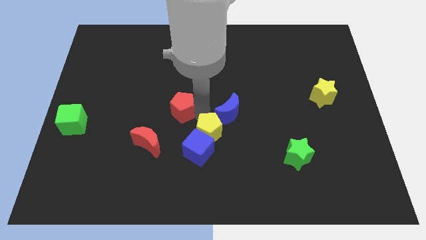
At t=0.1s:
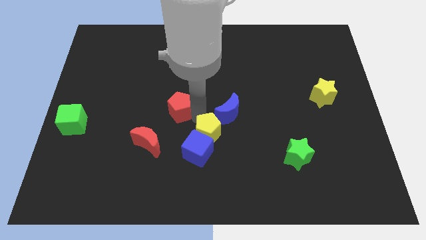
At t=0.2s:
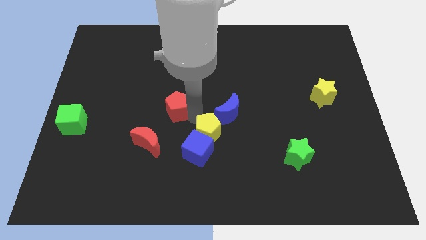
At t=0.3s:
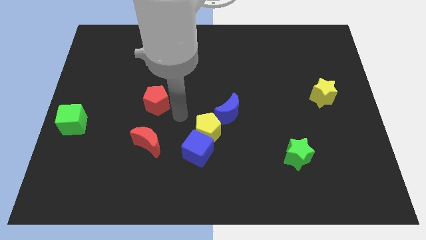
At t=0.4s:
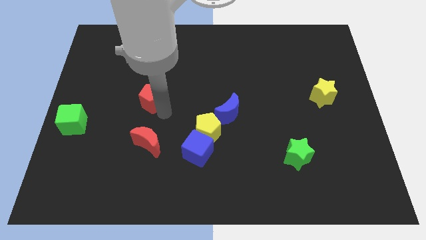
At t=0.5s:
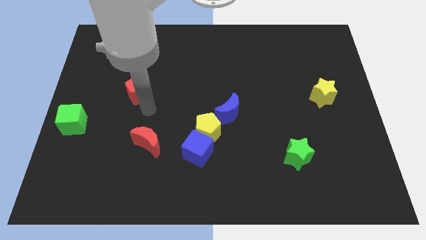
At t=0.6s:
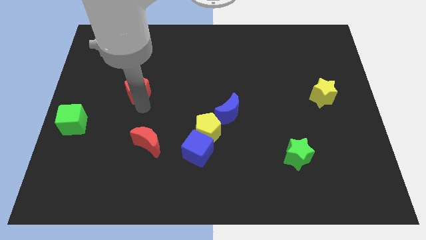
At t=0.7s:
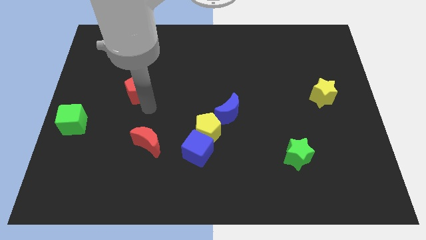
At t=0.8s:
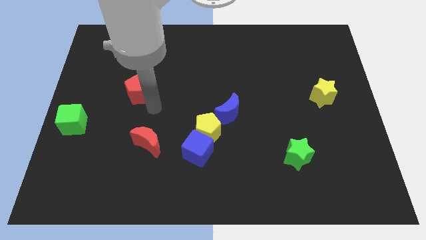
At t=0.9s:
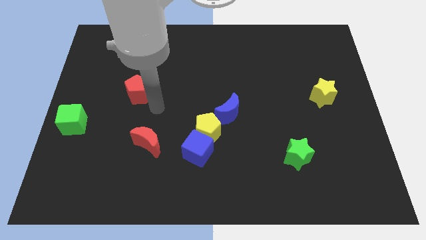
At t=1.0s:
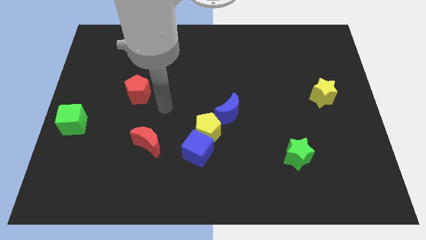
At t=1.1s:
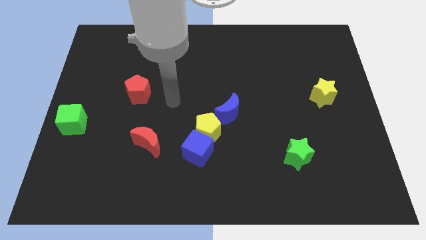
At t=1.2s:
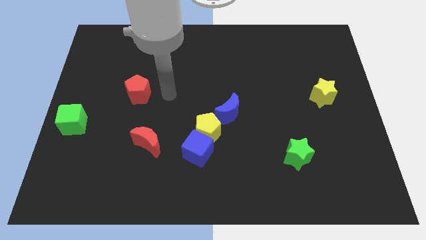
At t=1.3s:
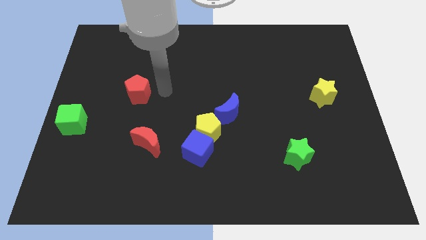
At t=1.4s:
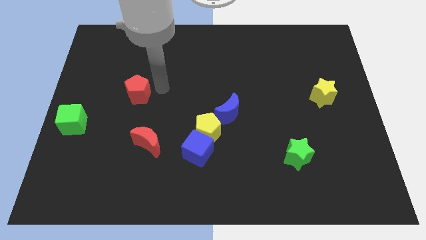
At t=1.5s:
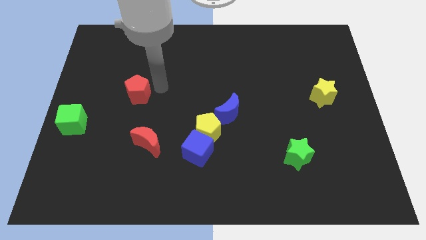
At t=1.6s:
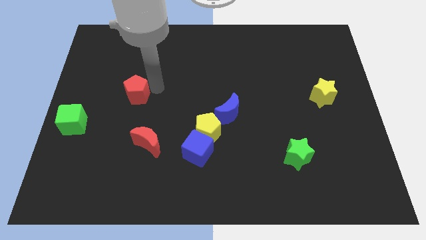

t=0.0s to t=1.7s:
move the red pentagon slightly towards the top left of the board

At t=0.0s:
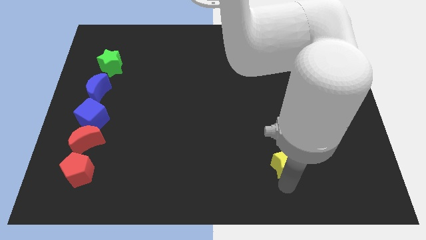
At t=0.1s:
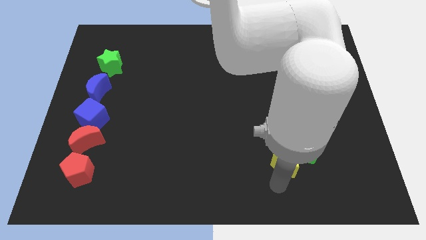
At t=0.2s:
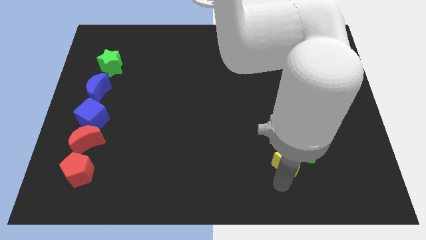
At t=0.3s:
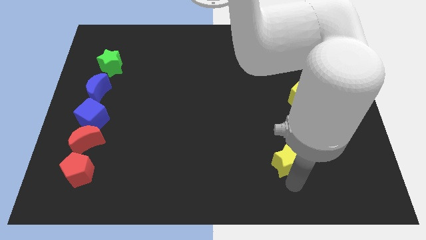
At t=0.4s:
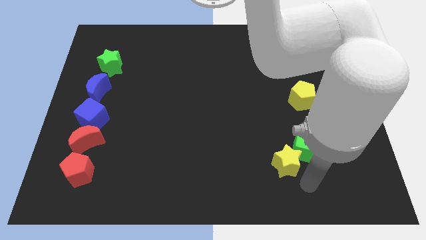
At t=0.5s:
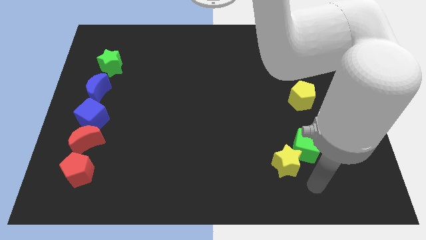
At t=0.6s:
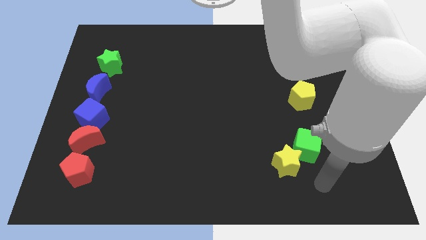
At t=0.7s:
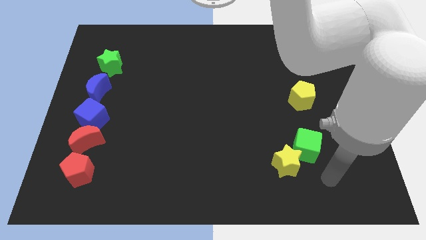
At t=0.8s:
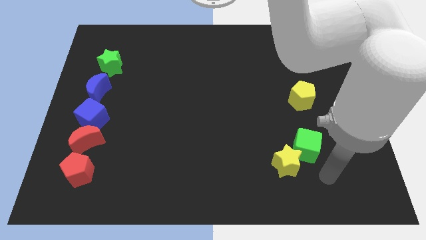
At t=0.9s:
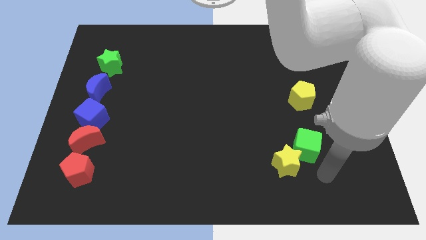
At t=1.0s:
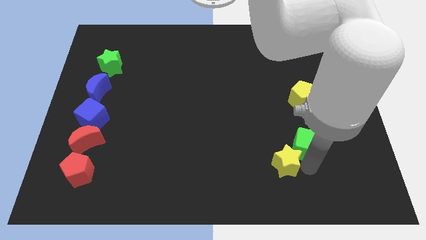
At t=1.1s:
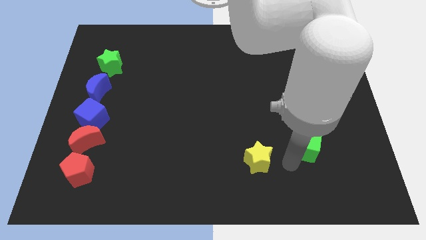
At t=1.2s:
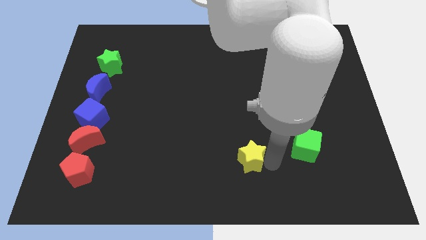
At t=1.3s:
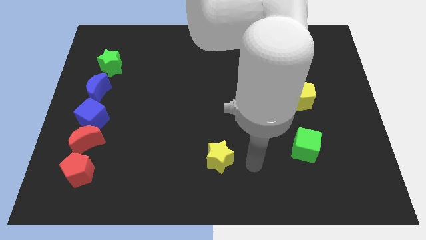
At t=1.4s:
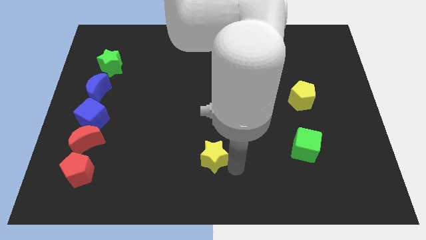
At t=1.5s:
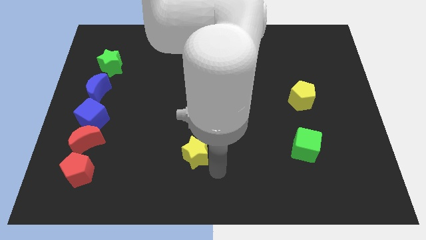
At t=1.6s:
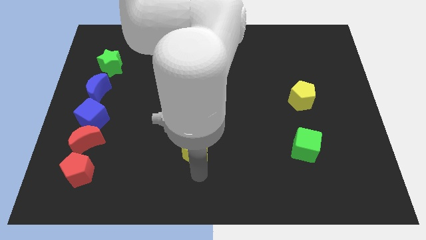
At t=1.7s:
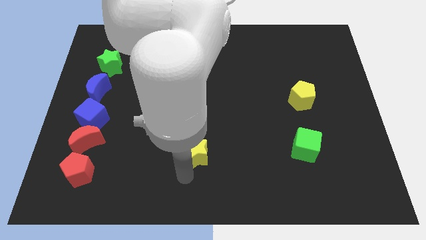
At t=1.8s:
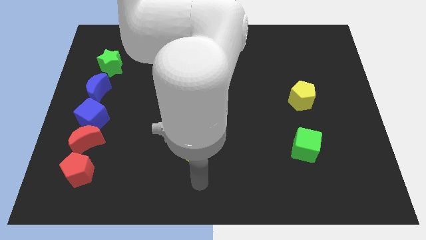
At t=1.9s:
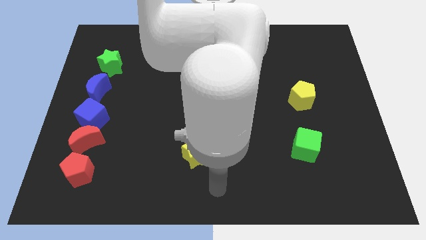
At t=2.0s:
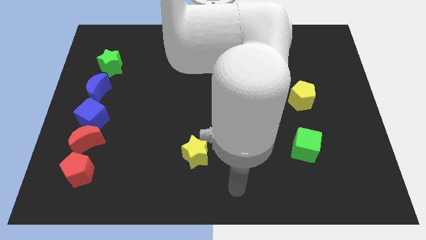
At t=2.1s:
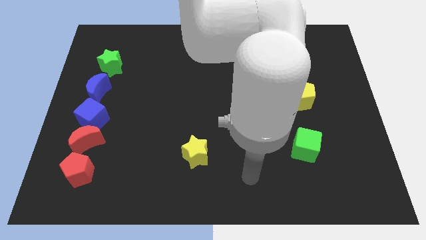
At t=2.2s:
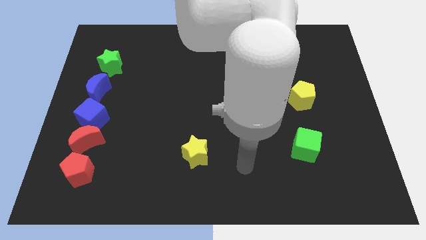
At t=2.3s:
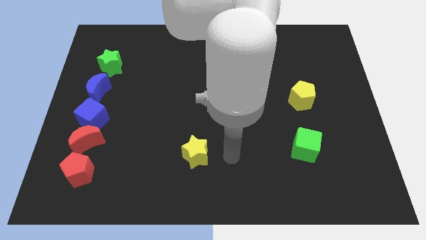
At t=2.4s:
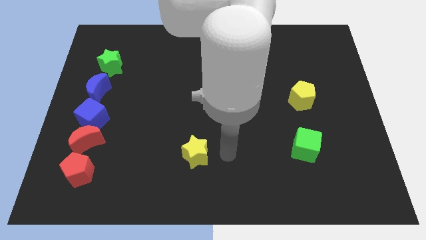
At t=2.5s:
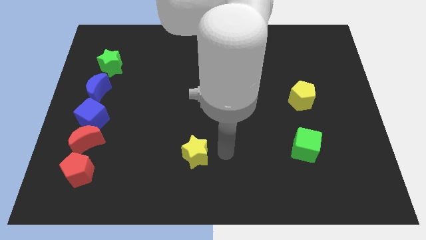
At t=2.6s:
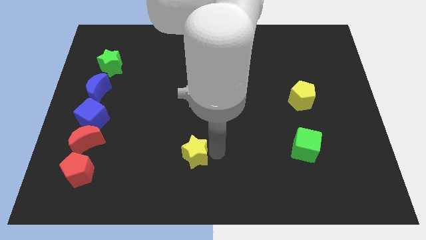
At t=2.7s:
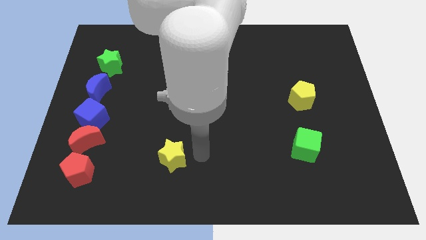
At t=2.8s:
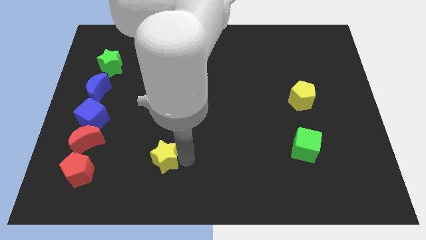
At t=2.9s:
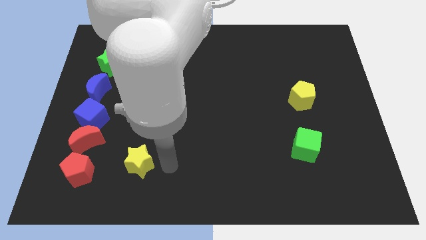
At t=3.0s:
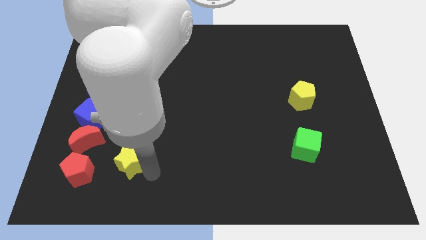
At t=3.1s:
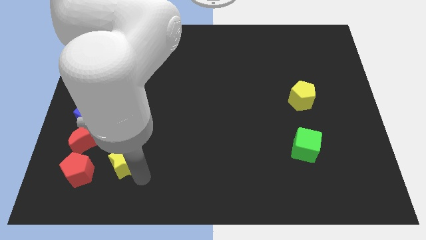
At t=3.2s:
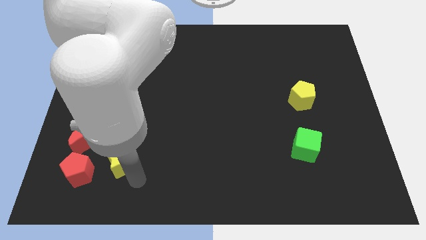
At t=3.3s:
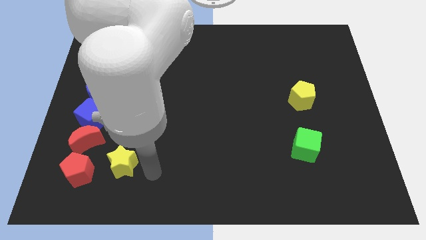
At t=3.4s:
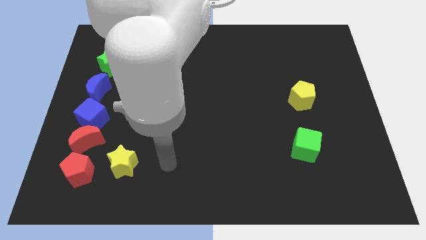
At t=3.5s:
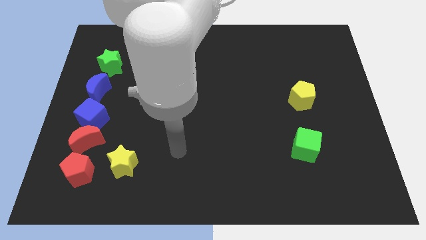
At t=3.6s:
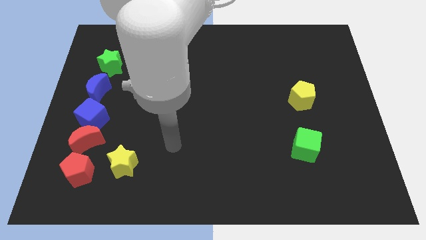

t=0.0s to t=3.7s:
separate yellow pentagon from green cube

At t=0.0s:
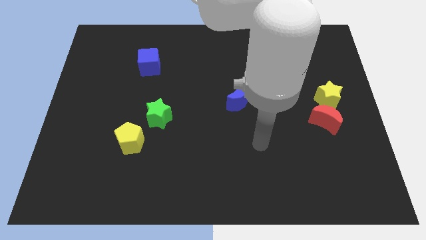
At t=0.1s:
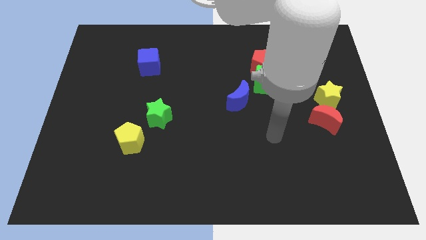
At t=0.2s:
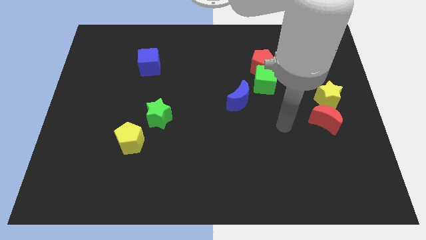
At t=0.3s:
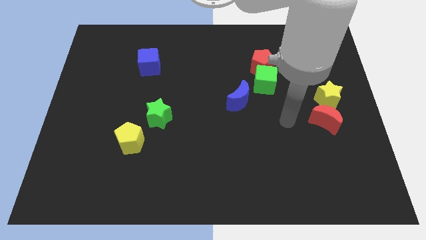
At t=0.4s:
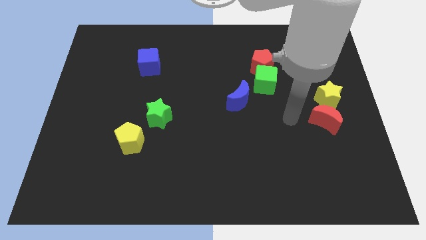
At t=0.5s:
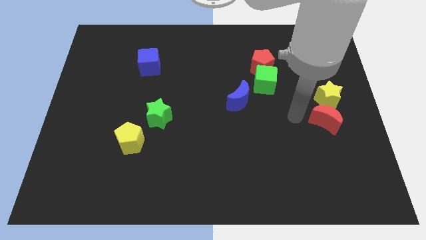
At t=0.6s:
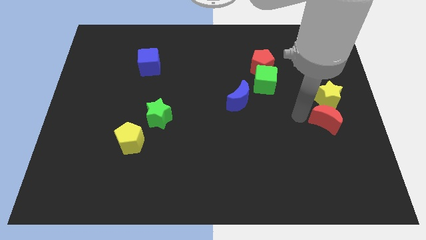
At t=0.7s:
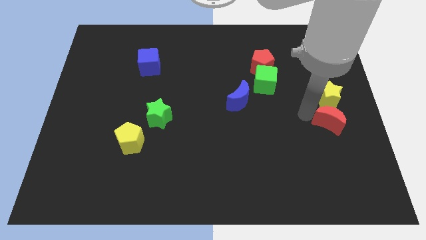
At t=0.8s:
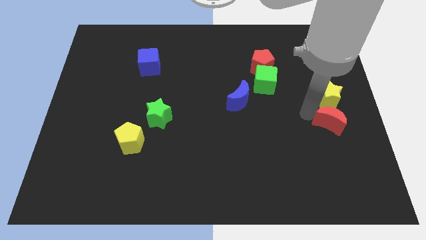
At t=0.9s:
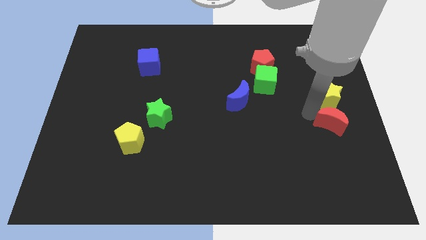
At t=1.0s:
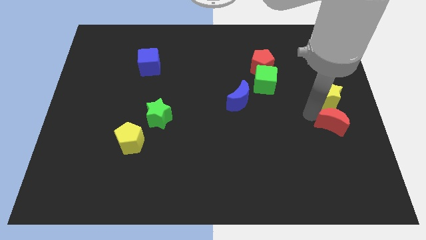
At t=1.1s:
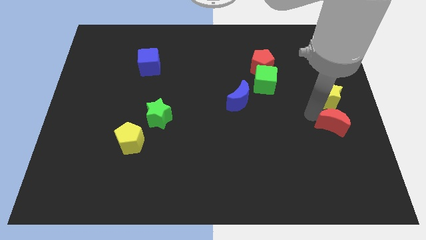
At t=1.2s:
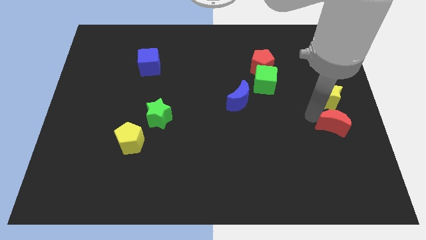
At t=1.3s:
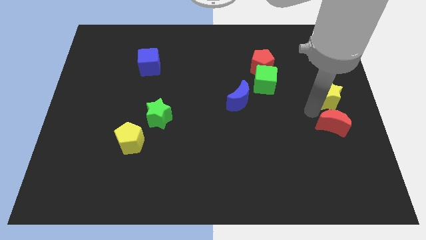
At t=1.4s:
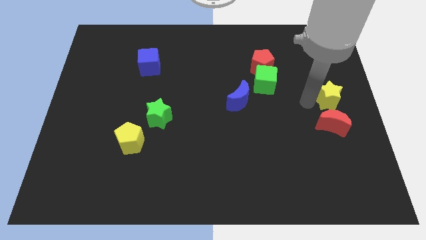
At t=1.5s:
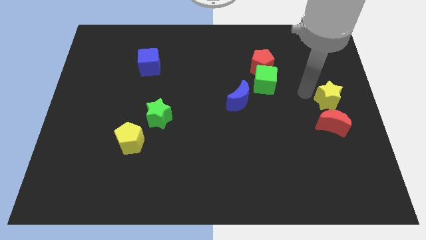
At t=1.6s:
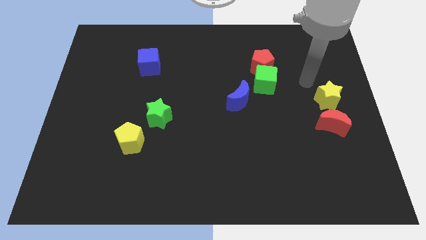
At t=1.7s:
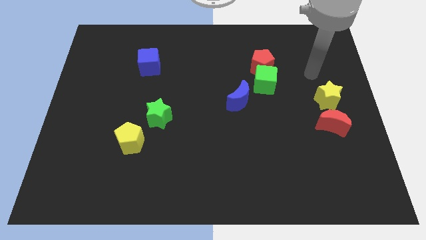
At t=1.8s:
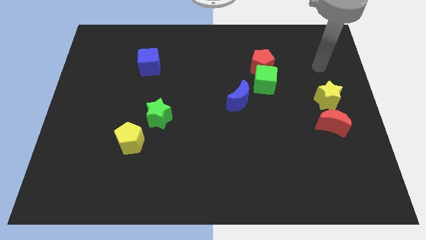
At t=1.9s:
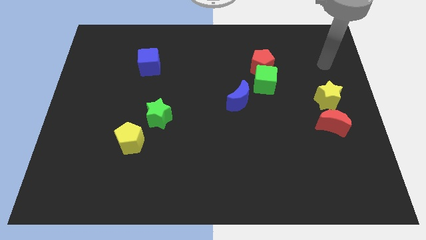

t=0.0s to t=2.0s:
push the red crescent to the right of the board

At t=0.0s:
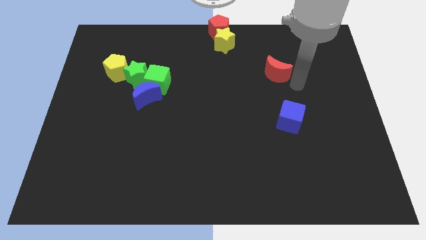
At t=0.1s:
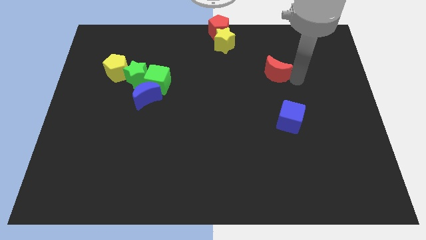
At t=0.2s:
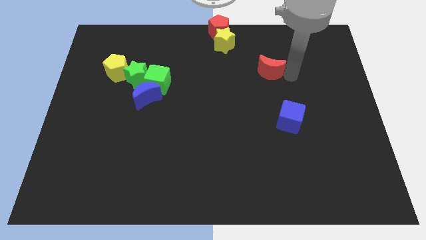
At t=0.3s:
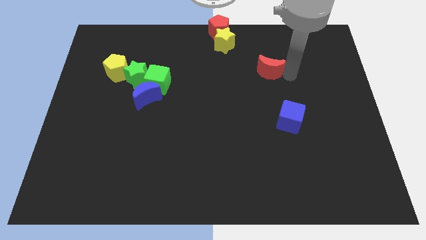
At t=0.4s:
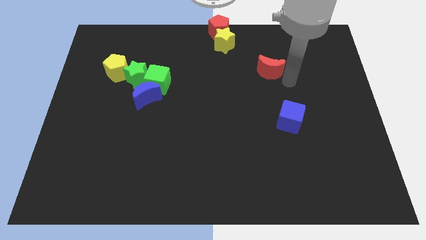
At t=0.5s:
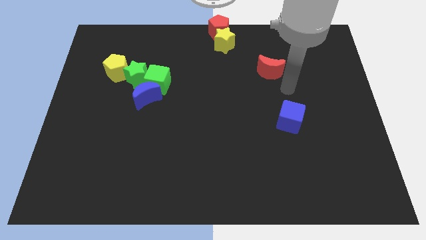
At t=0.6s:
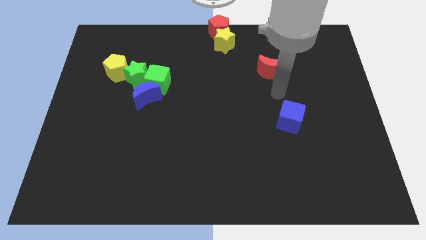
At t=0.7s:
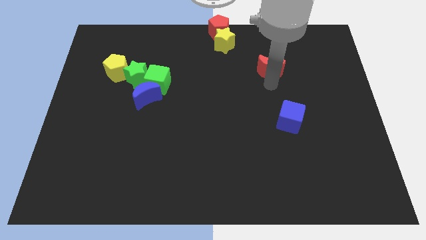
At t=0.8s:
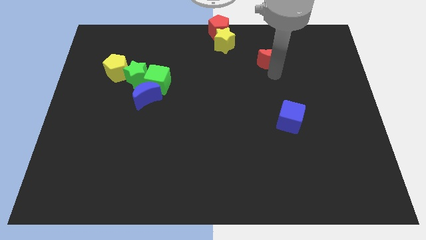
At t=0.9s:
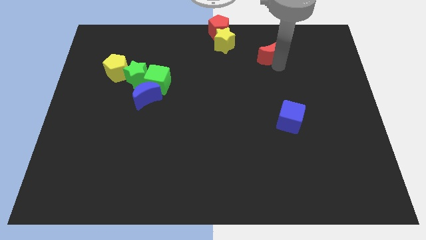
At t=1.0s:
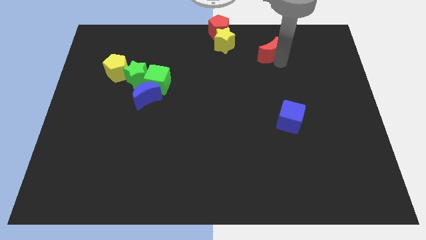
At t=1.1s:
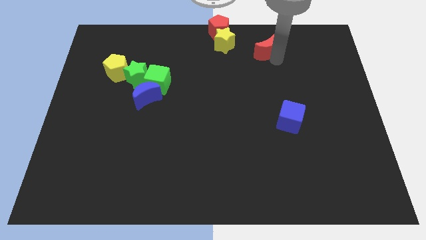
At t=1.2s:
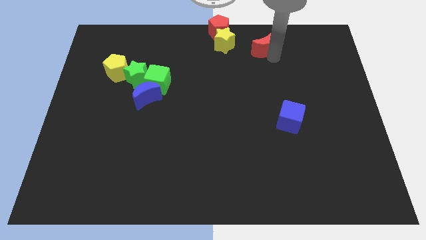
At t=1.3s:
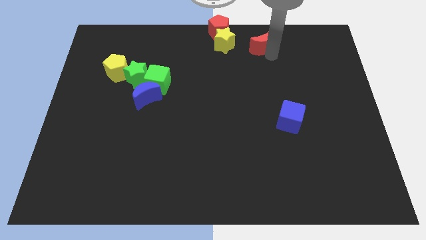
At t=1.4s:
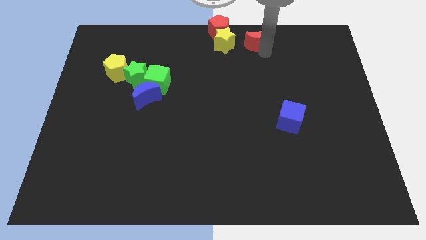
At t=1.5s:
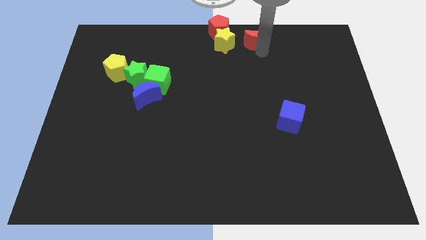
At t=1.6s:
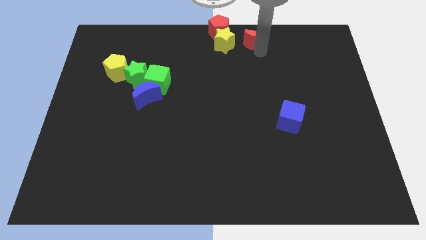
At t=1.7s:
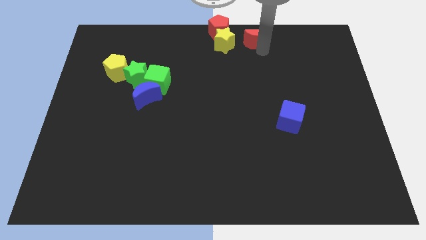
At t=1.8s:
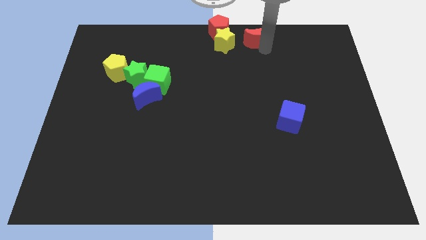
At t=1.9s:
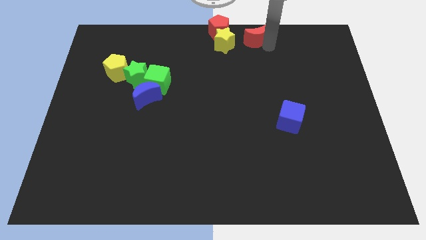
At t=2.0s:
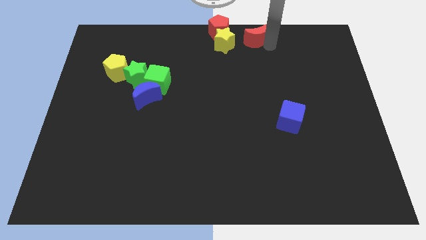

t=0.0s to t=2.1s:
place the red moon right to the yellow star
